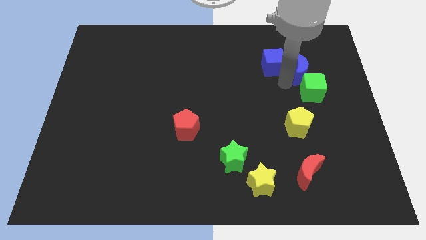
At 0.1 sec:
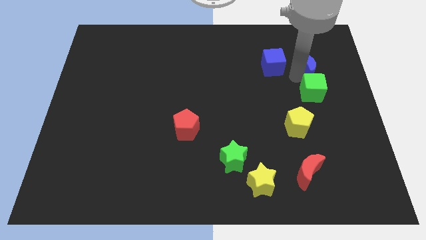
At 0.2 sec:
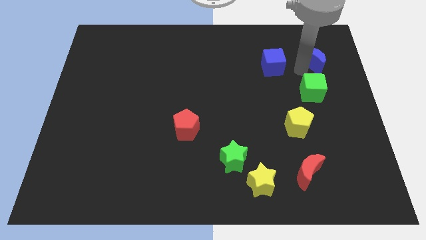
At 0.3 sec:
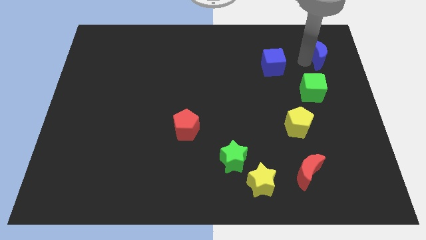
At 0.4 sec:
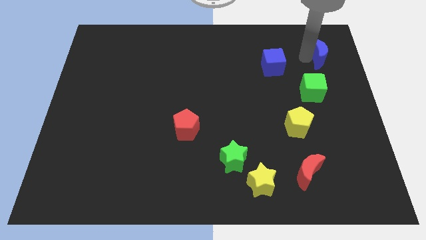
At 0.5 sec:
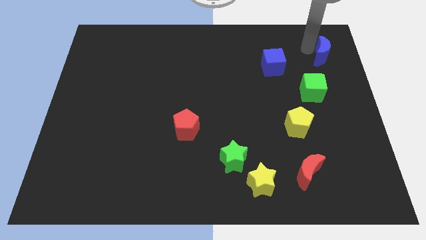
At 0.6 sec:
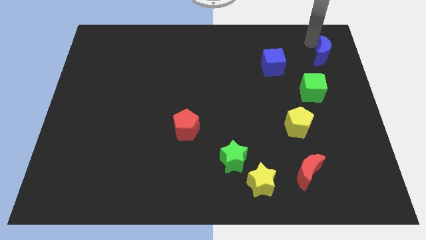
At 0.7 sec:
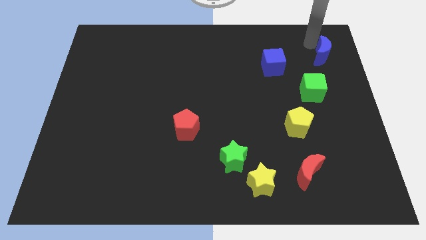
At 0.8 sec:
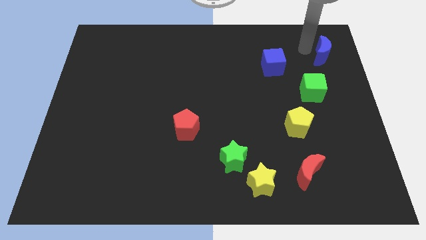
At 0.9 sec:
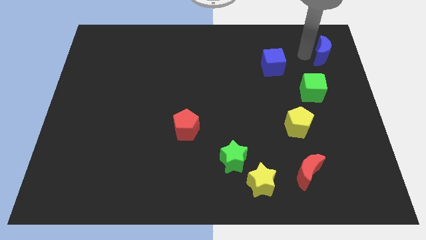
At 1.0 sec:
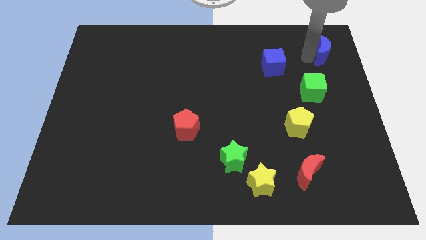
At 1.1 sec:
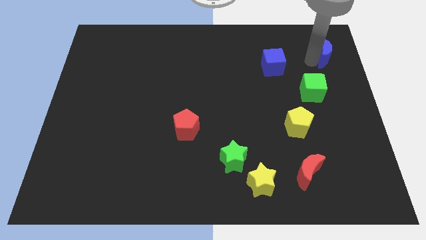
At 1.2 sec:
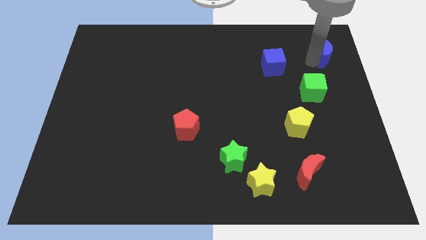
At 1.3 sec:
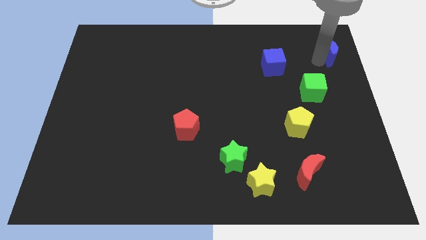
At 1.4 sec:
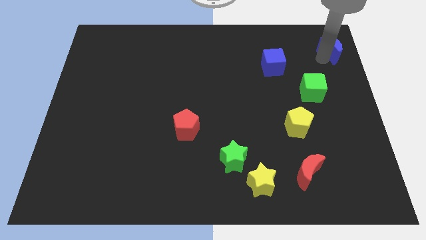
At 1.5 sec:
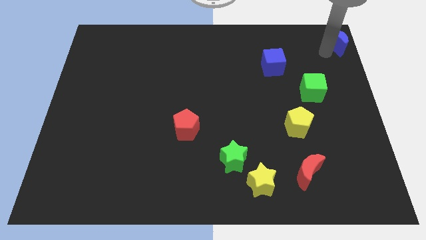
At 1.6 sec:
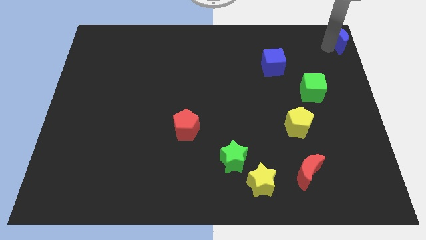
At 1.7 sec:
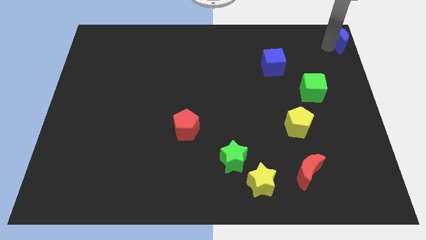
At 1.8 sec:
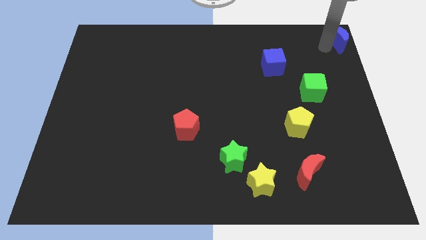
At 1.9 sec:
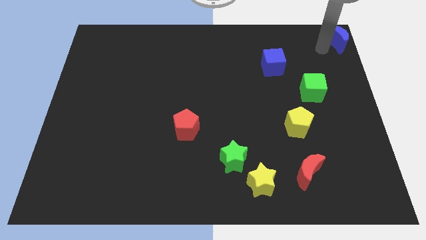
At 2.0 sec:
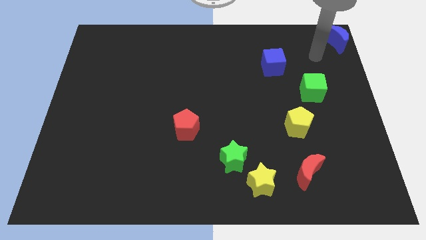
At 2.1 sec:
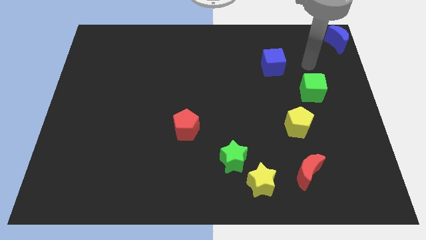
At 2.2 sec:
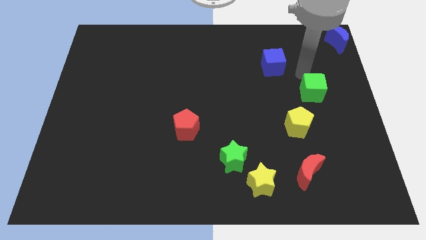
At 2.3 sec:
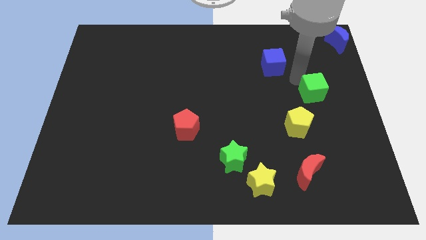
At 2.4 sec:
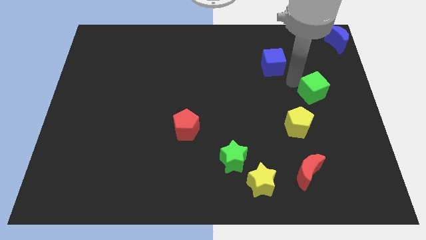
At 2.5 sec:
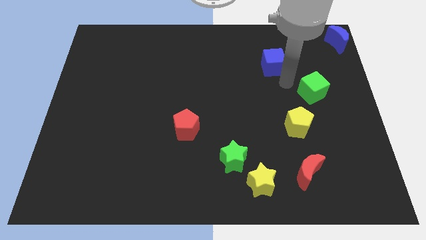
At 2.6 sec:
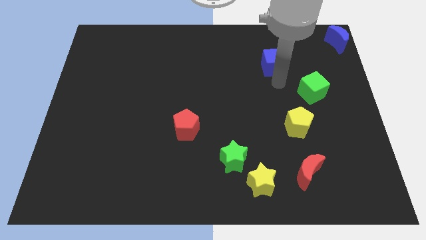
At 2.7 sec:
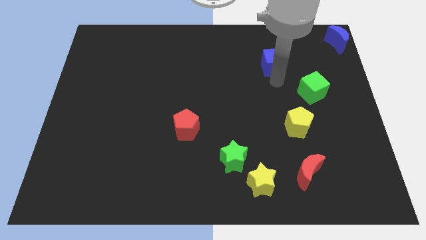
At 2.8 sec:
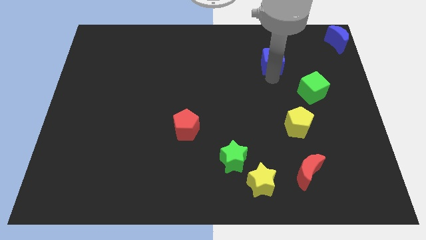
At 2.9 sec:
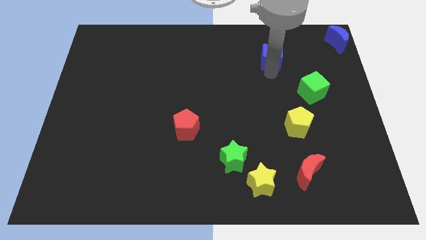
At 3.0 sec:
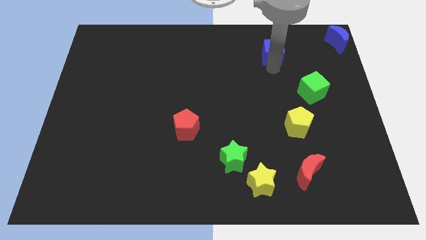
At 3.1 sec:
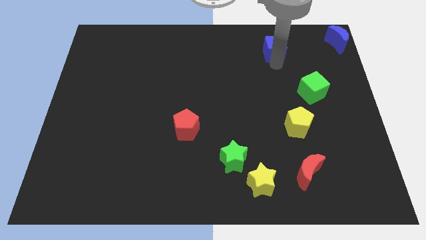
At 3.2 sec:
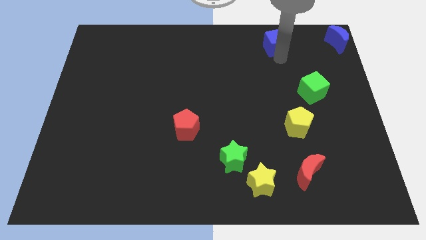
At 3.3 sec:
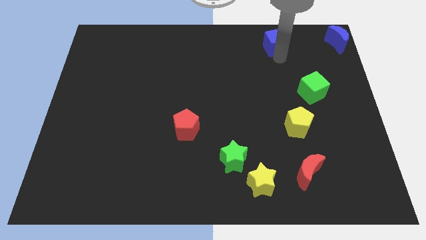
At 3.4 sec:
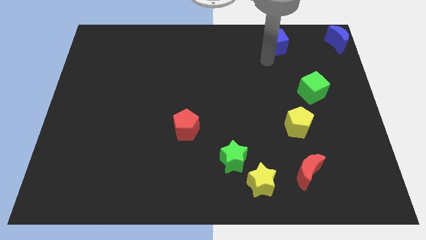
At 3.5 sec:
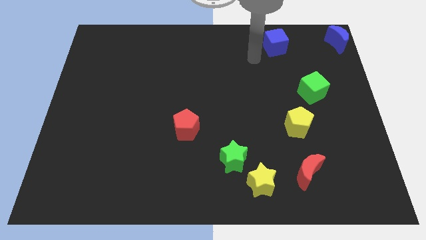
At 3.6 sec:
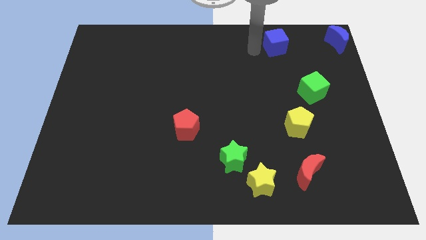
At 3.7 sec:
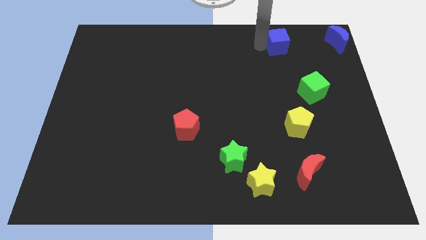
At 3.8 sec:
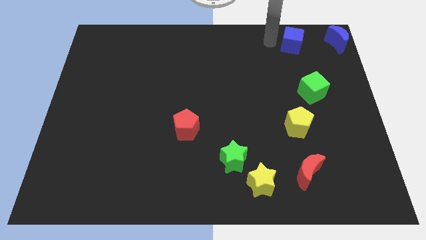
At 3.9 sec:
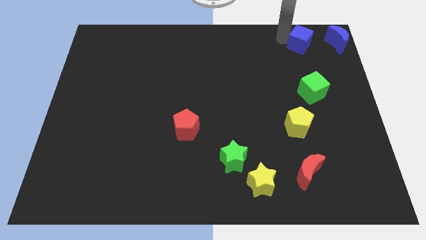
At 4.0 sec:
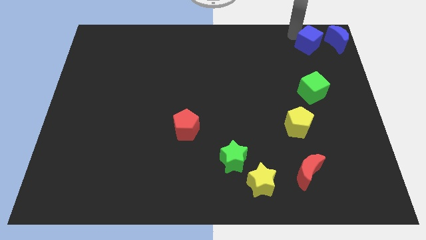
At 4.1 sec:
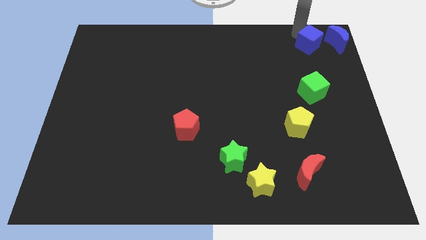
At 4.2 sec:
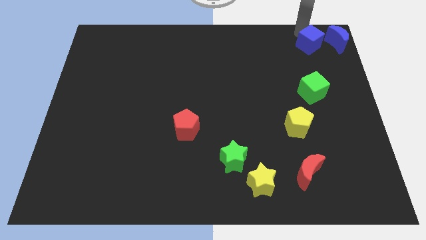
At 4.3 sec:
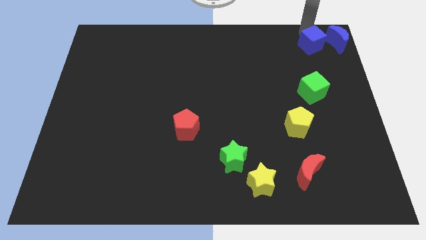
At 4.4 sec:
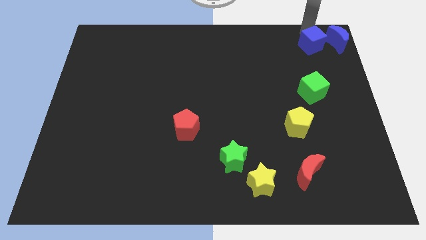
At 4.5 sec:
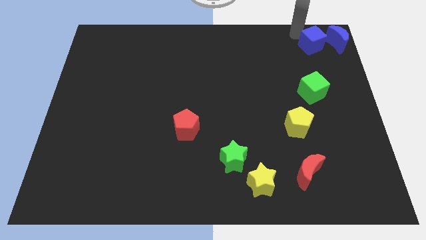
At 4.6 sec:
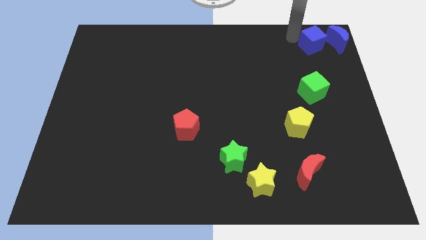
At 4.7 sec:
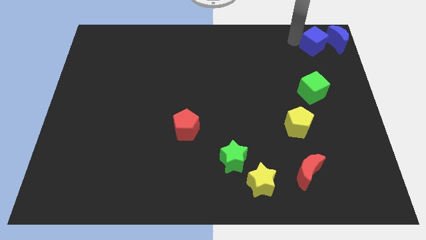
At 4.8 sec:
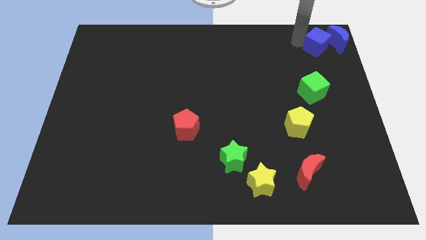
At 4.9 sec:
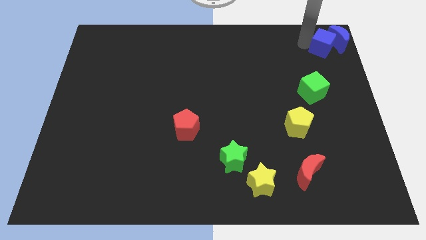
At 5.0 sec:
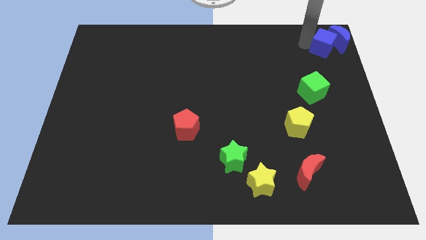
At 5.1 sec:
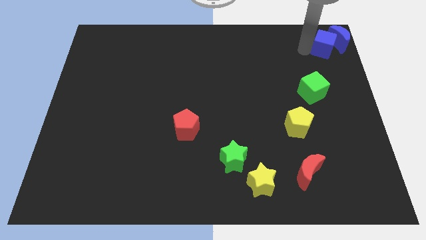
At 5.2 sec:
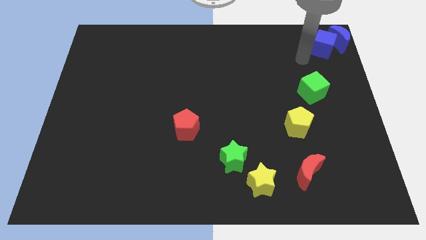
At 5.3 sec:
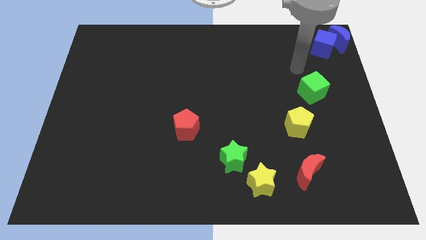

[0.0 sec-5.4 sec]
place both the blue blocks at the top right corner of the board

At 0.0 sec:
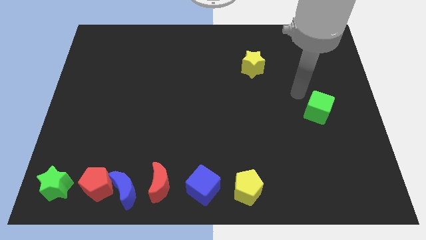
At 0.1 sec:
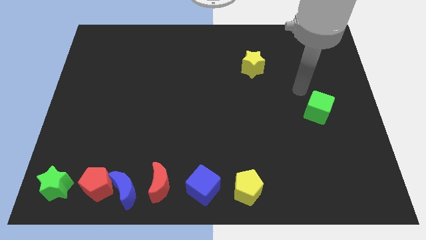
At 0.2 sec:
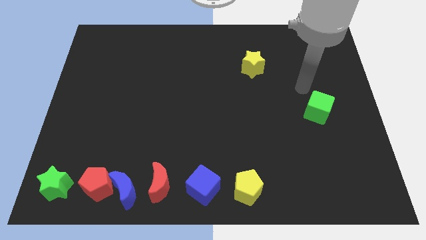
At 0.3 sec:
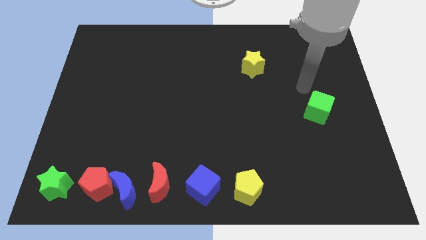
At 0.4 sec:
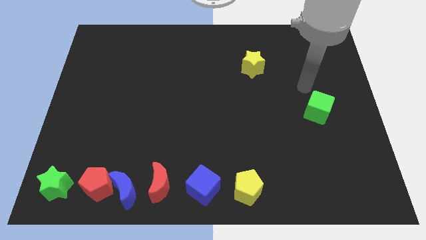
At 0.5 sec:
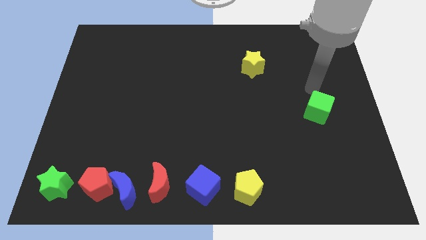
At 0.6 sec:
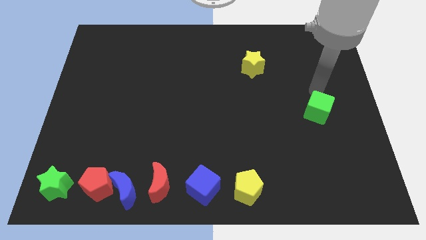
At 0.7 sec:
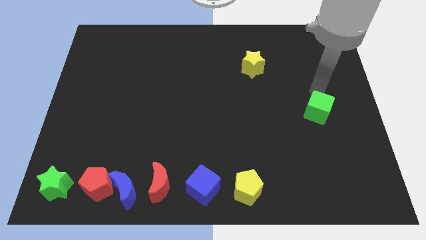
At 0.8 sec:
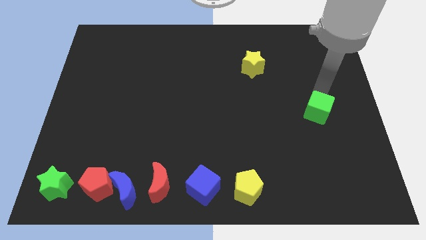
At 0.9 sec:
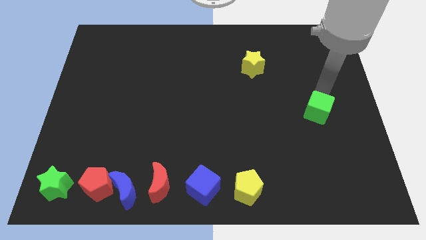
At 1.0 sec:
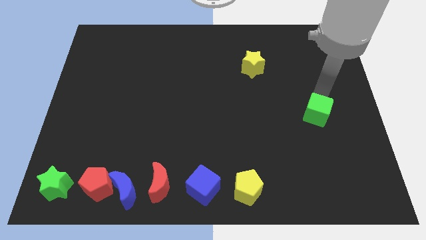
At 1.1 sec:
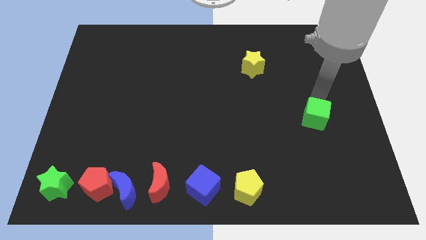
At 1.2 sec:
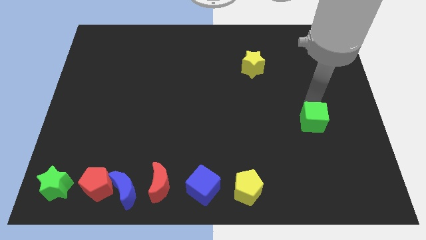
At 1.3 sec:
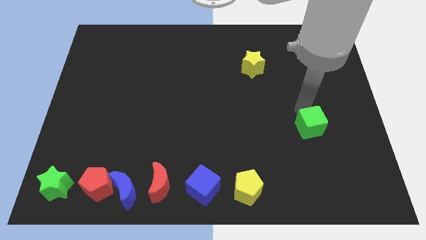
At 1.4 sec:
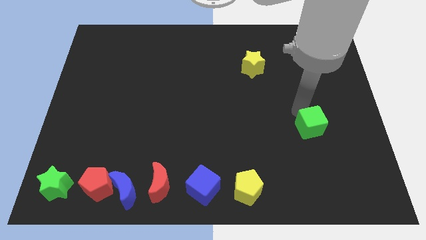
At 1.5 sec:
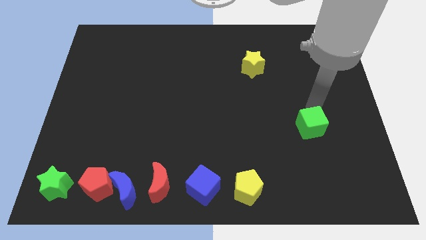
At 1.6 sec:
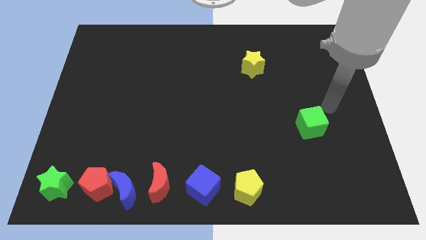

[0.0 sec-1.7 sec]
push the green cube slightly downwards

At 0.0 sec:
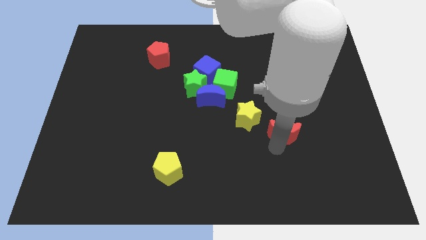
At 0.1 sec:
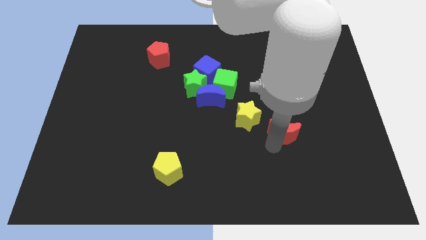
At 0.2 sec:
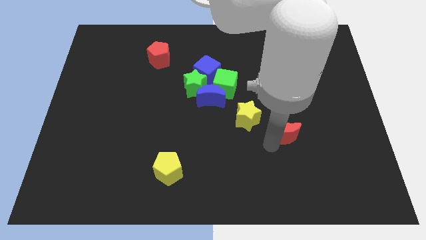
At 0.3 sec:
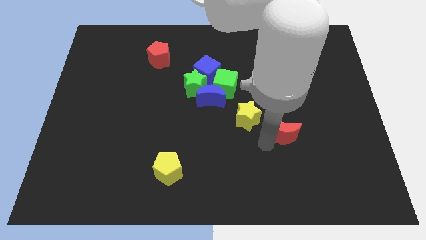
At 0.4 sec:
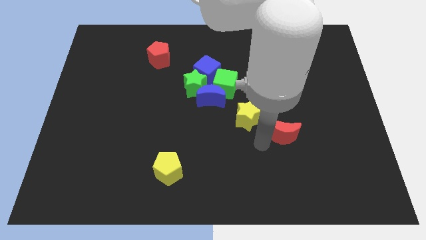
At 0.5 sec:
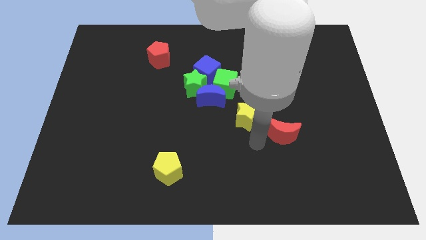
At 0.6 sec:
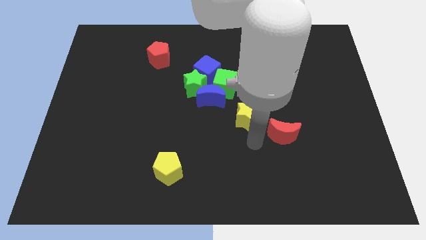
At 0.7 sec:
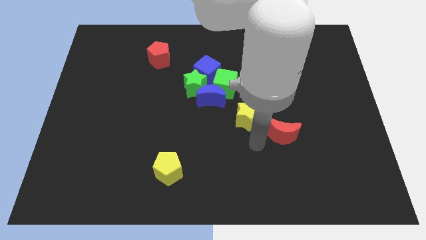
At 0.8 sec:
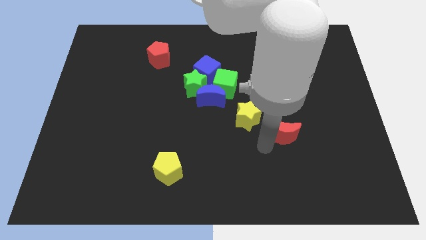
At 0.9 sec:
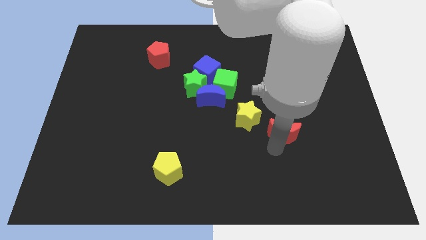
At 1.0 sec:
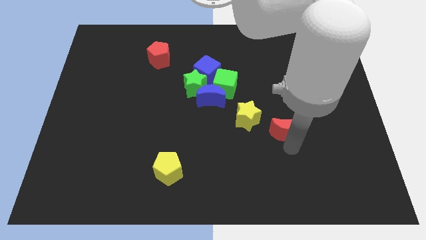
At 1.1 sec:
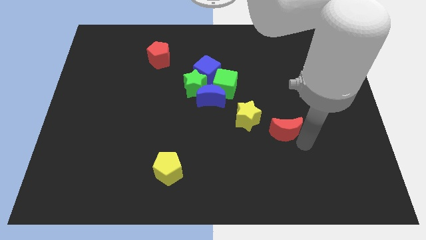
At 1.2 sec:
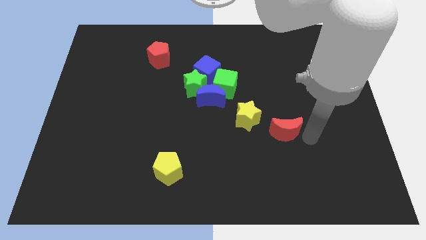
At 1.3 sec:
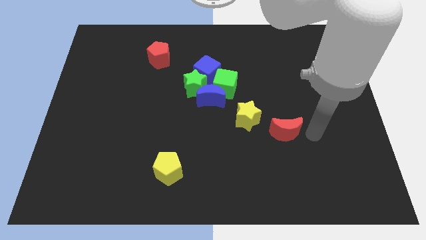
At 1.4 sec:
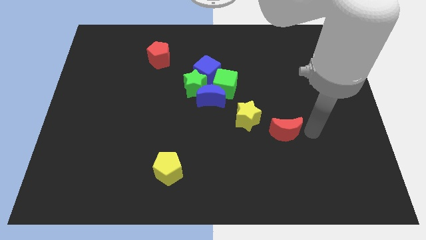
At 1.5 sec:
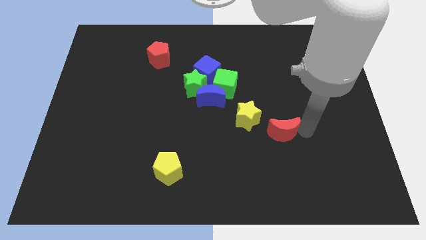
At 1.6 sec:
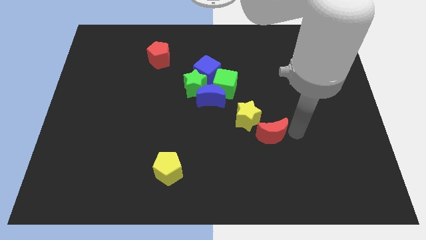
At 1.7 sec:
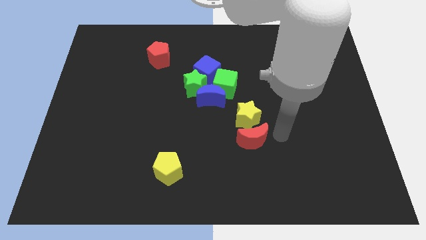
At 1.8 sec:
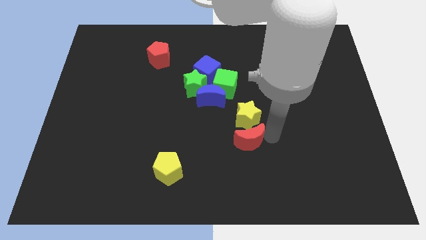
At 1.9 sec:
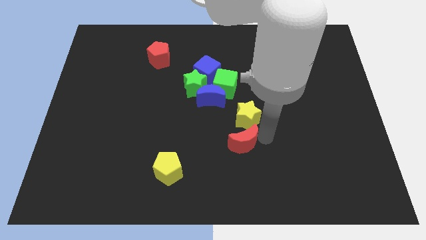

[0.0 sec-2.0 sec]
move the red moon under the yellow star

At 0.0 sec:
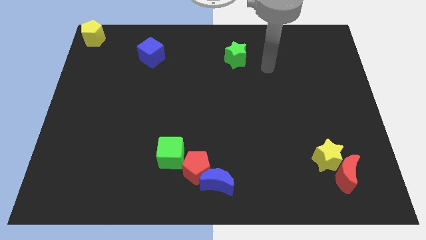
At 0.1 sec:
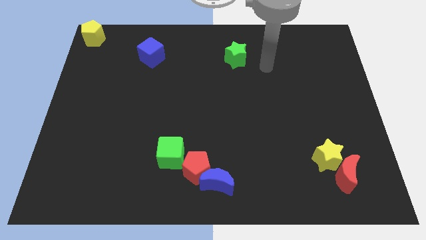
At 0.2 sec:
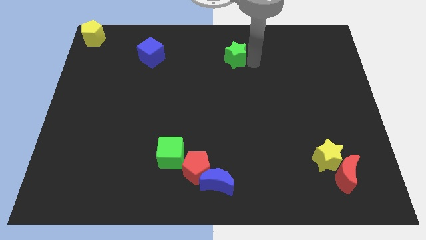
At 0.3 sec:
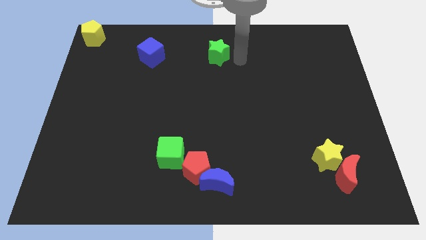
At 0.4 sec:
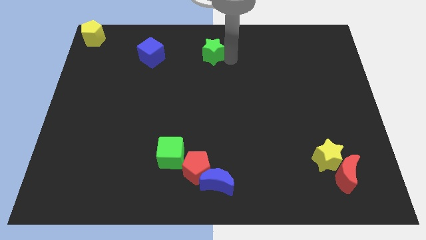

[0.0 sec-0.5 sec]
place the green star to the right side of blue cube
